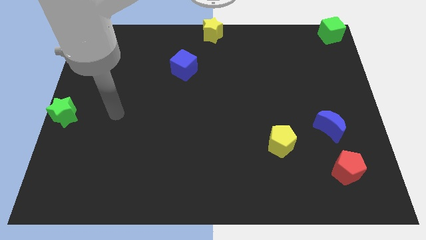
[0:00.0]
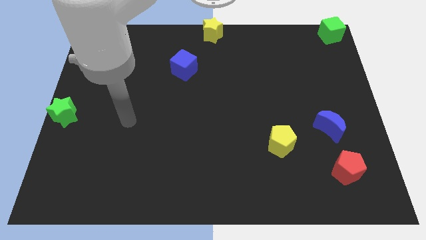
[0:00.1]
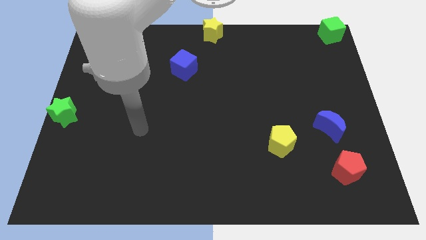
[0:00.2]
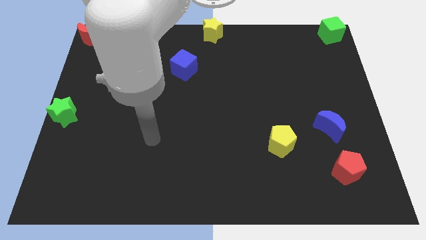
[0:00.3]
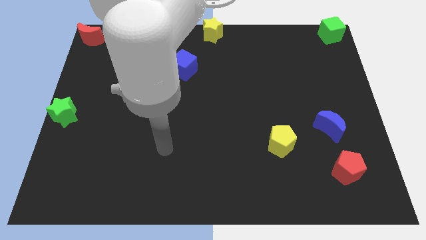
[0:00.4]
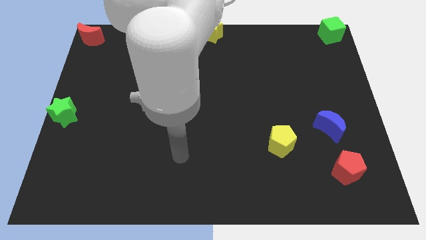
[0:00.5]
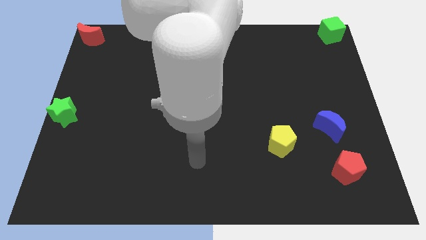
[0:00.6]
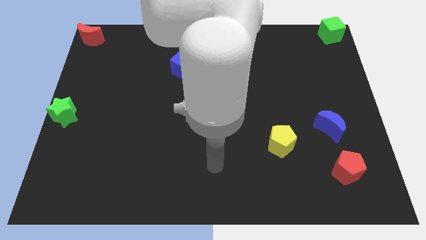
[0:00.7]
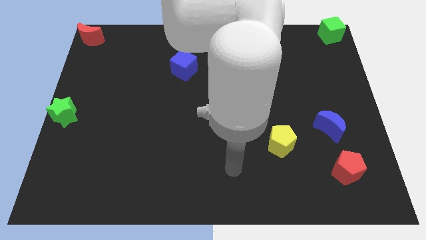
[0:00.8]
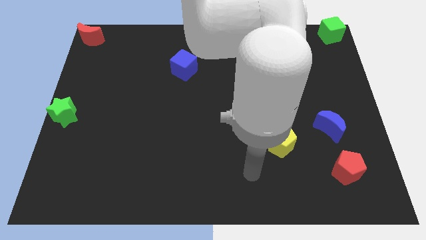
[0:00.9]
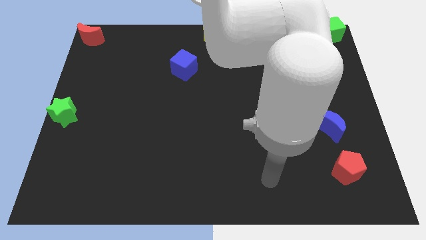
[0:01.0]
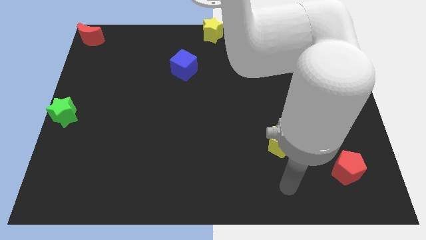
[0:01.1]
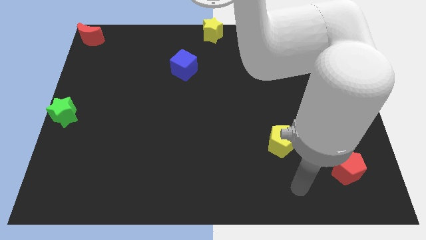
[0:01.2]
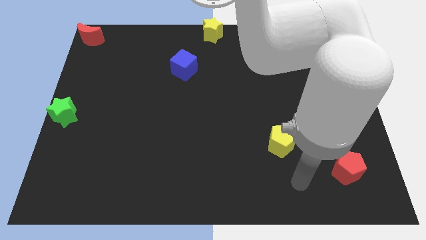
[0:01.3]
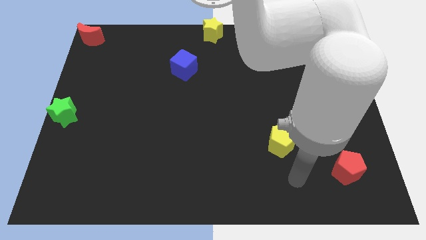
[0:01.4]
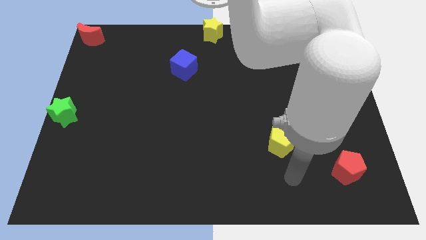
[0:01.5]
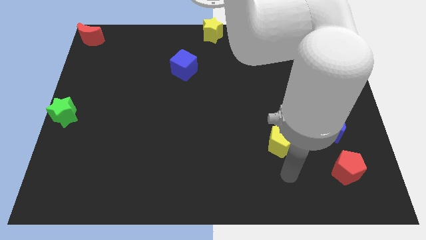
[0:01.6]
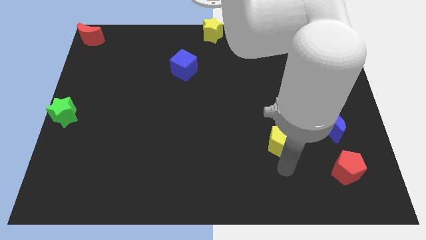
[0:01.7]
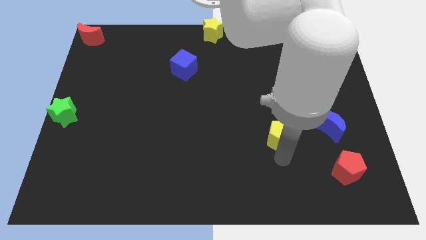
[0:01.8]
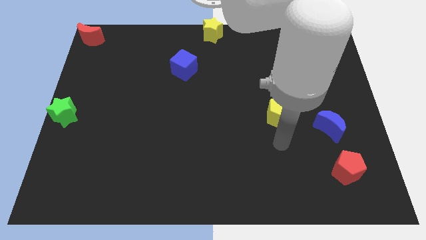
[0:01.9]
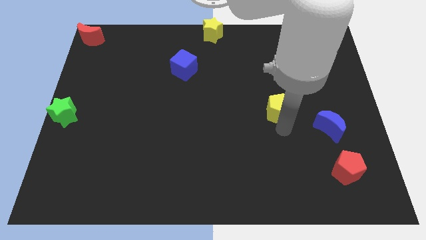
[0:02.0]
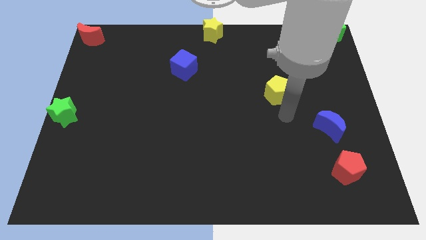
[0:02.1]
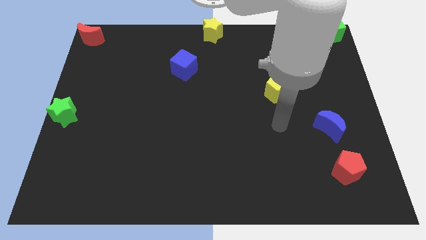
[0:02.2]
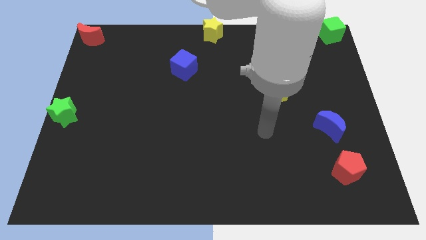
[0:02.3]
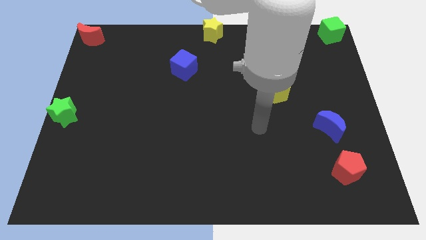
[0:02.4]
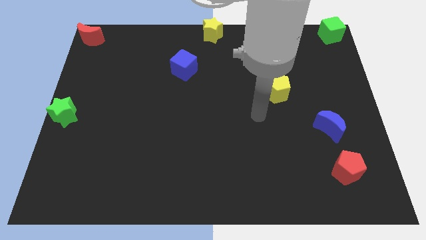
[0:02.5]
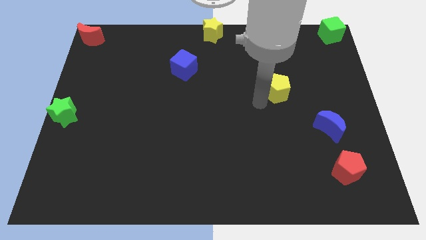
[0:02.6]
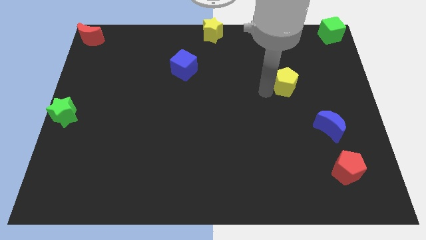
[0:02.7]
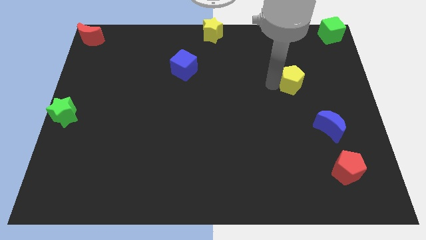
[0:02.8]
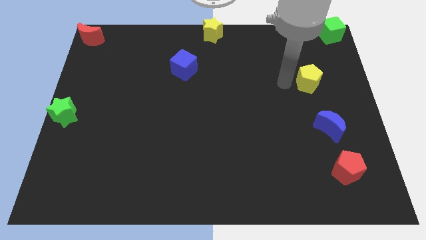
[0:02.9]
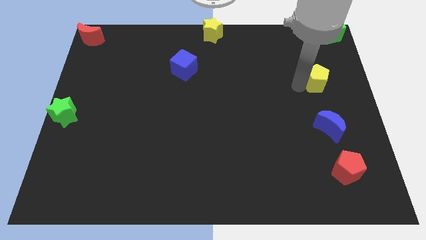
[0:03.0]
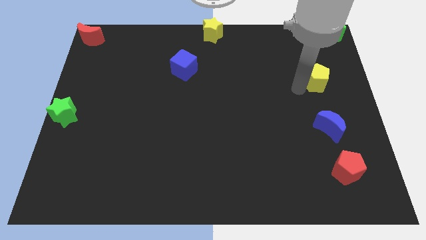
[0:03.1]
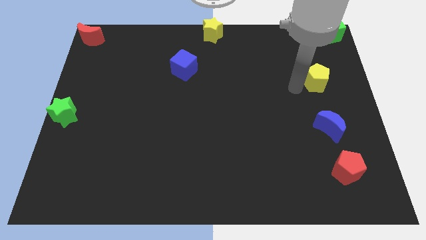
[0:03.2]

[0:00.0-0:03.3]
push the yellow pentagon to the top of the blue crescent

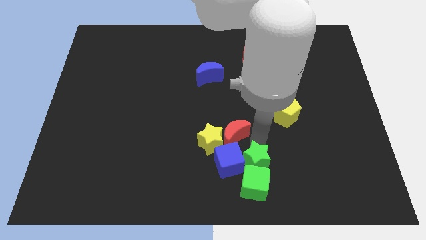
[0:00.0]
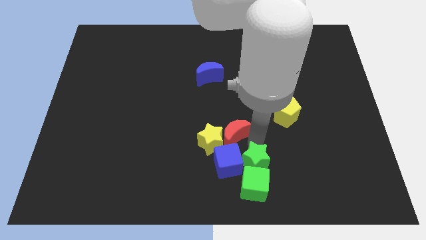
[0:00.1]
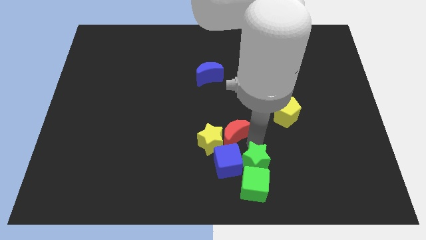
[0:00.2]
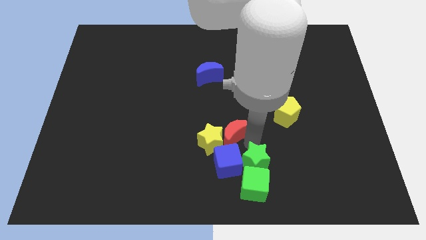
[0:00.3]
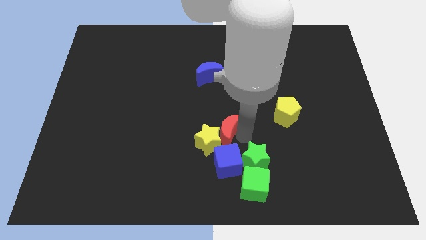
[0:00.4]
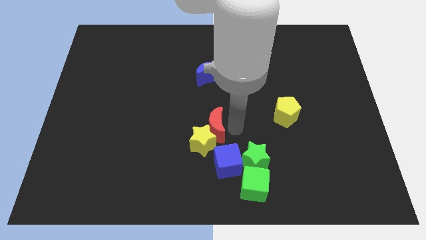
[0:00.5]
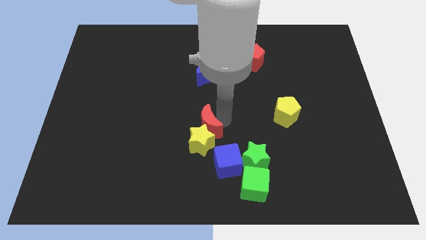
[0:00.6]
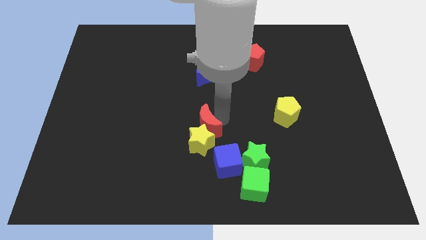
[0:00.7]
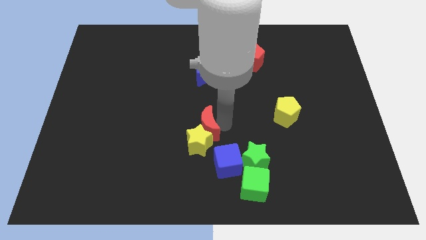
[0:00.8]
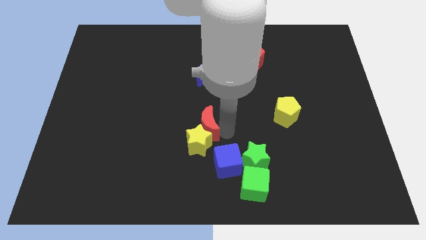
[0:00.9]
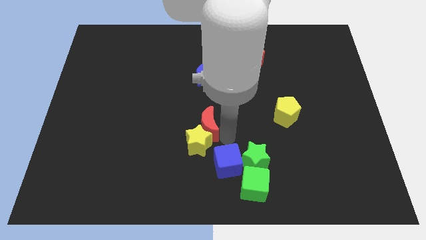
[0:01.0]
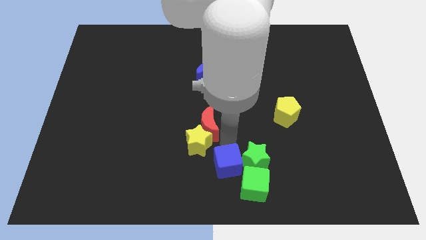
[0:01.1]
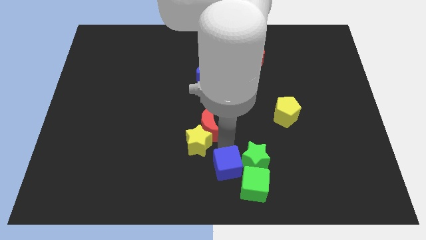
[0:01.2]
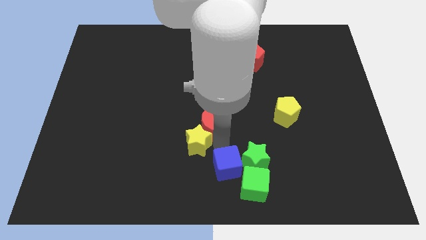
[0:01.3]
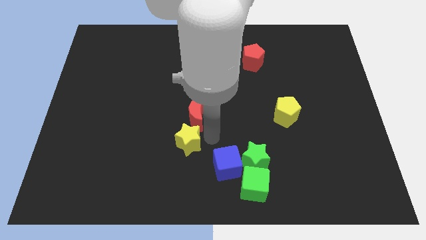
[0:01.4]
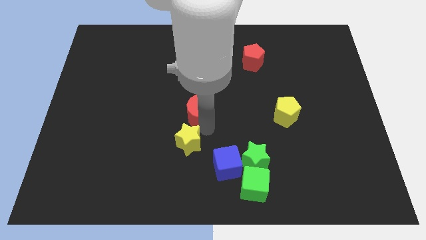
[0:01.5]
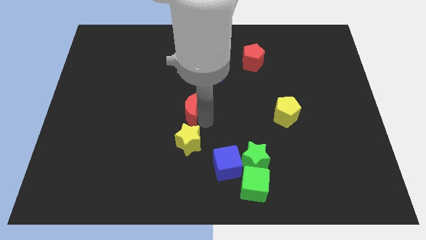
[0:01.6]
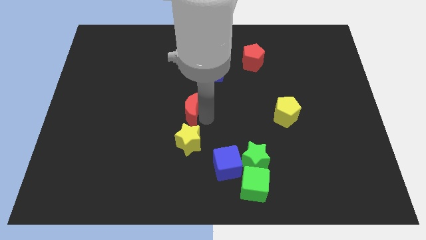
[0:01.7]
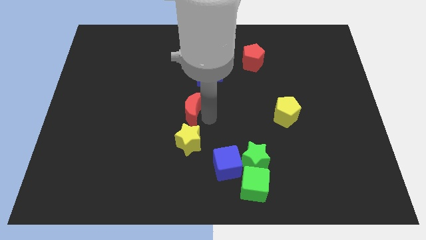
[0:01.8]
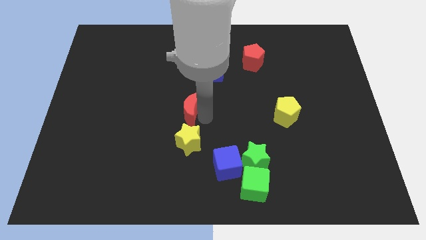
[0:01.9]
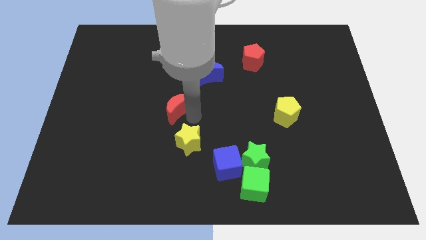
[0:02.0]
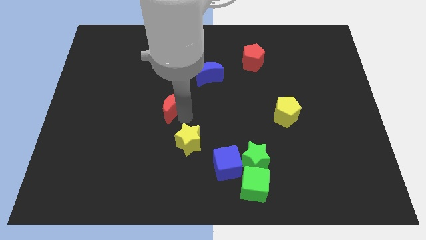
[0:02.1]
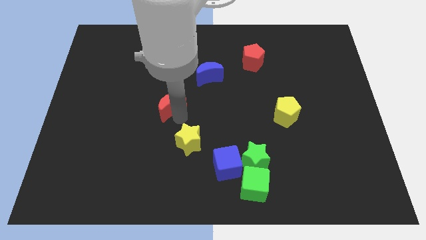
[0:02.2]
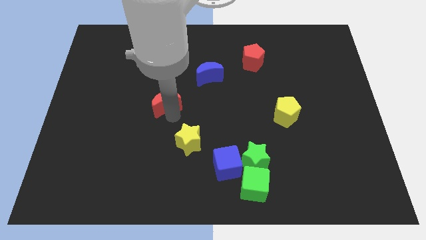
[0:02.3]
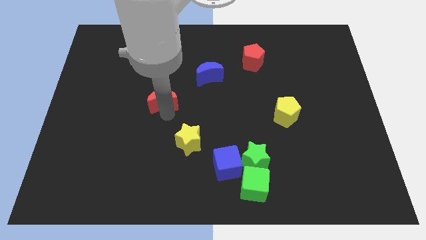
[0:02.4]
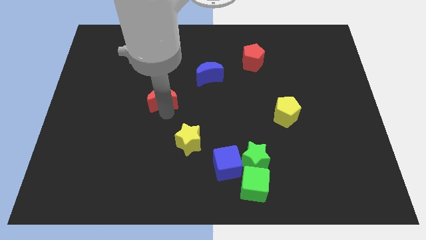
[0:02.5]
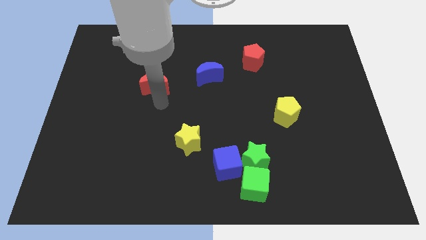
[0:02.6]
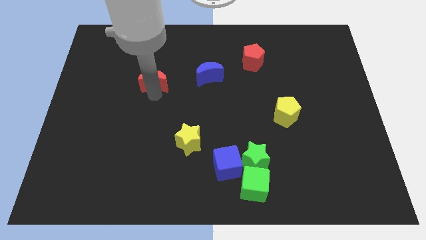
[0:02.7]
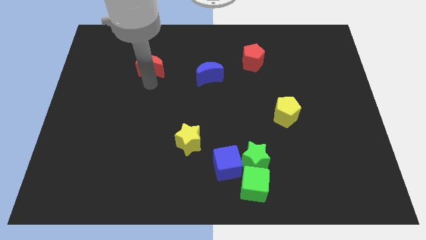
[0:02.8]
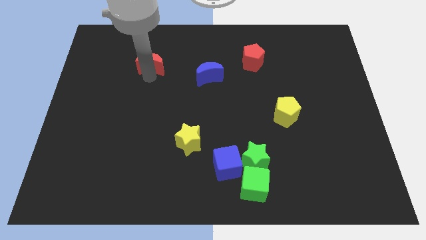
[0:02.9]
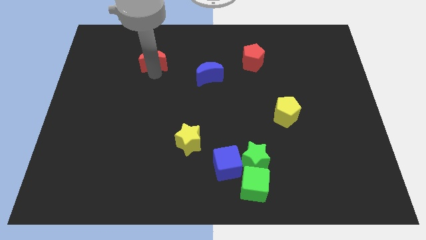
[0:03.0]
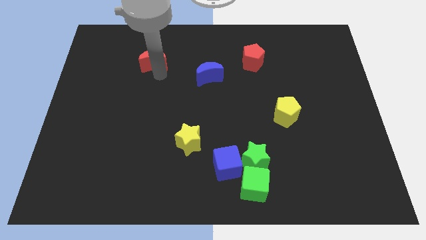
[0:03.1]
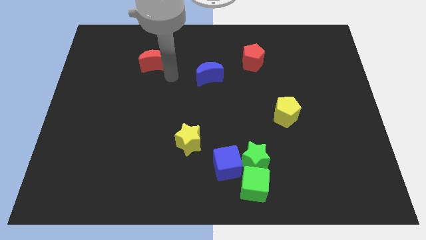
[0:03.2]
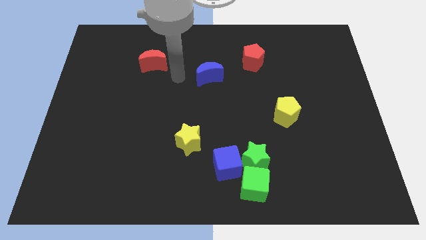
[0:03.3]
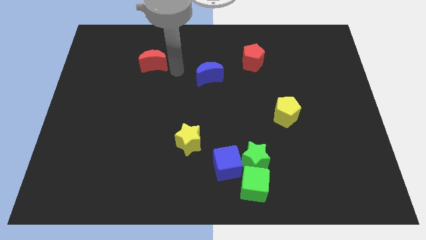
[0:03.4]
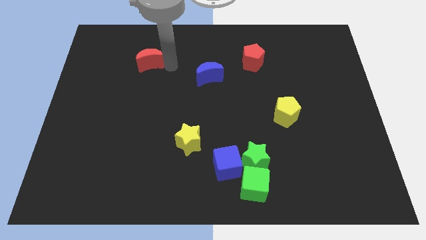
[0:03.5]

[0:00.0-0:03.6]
separate the red moon with the yellow star towards the top

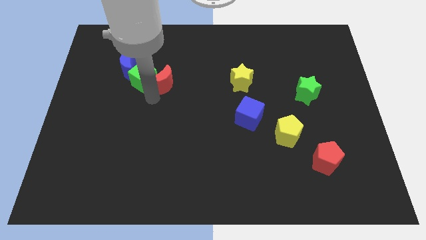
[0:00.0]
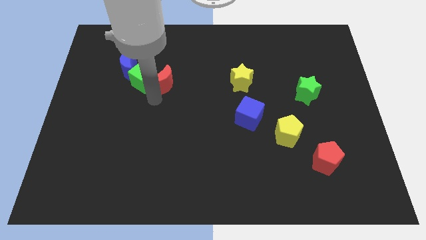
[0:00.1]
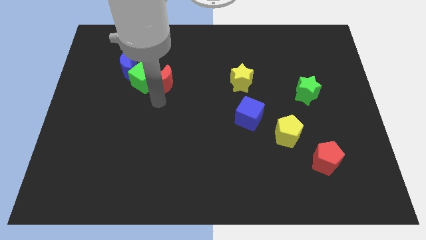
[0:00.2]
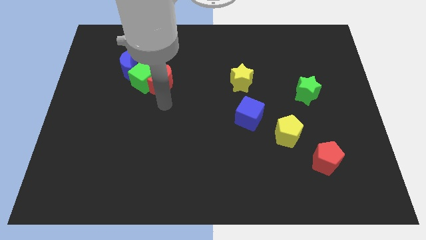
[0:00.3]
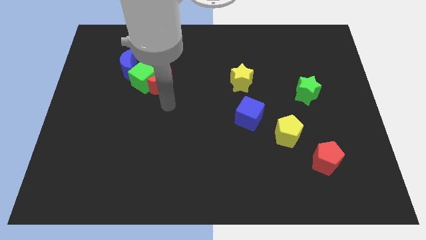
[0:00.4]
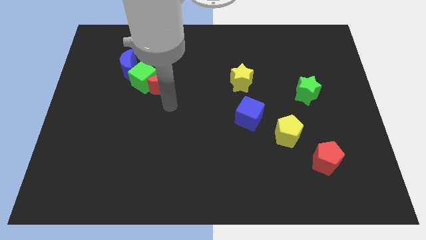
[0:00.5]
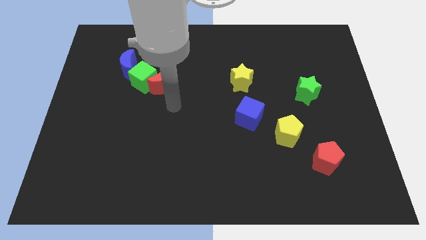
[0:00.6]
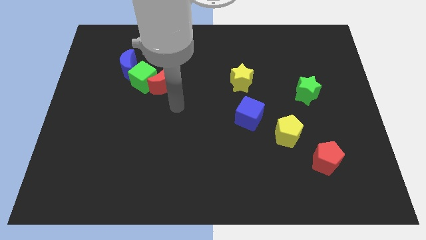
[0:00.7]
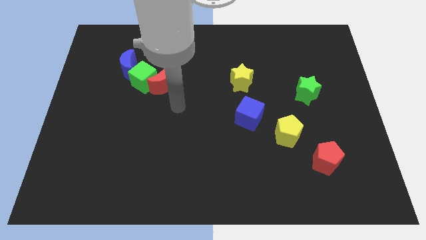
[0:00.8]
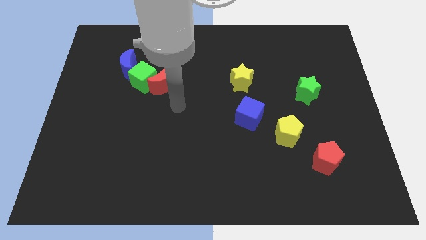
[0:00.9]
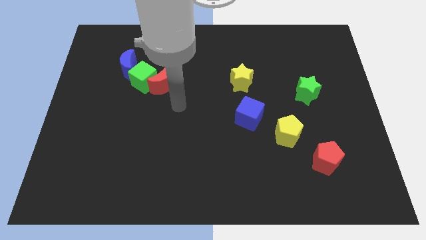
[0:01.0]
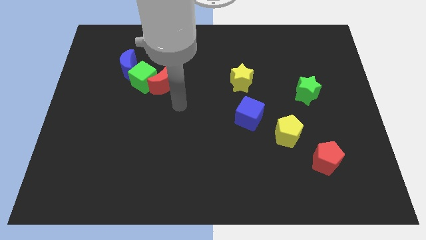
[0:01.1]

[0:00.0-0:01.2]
move the arm away from the red moon

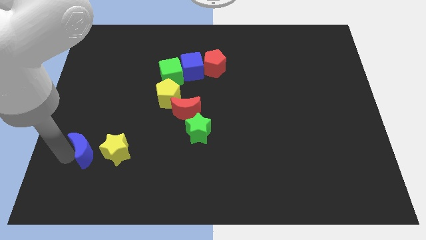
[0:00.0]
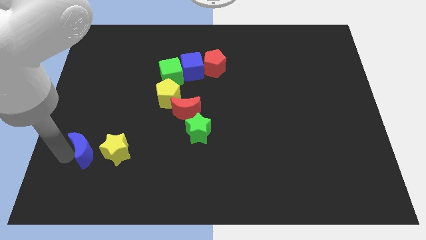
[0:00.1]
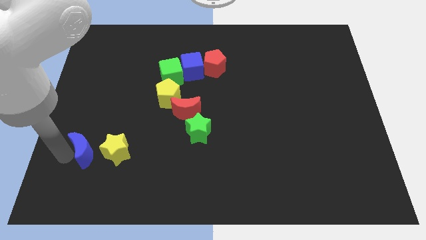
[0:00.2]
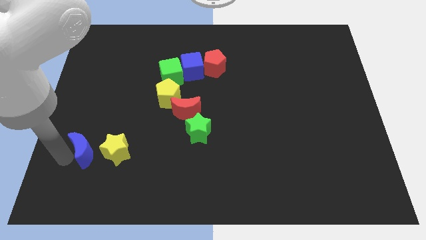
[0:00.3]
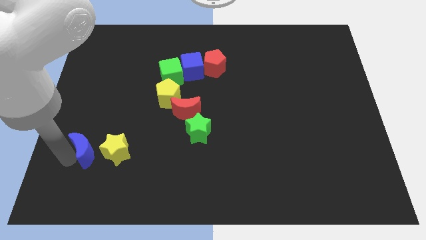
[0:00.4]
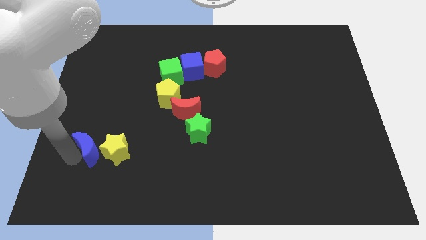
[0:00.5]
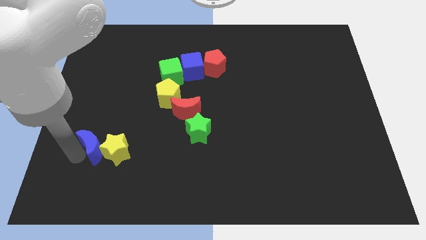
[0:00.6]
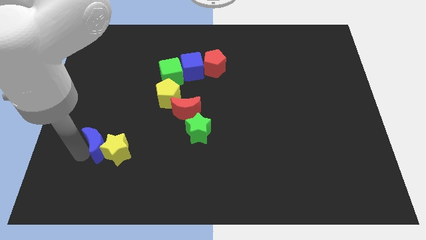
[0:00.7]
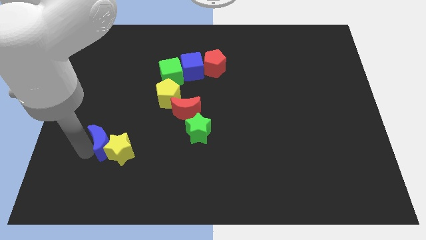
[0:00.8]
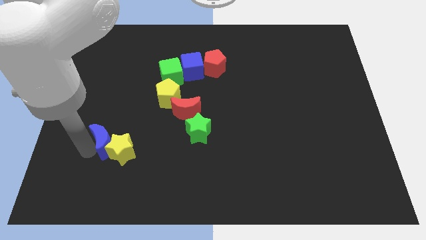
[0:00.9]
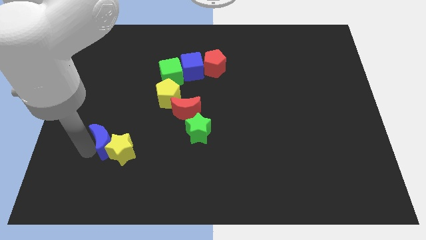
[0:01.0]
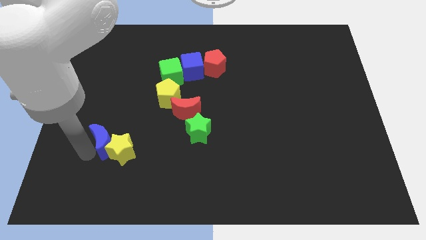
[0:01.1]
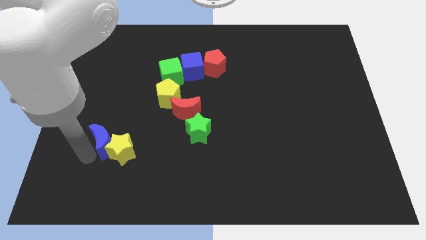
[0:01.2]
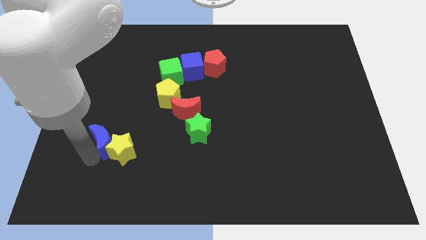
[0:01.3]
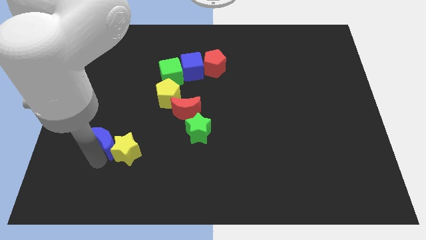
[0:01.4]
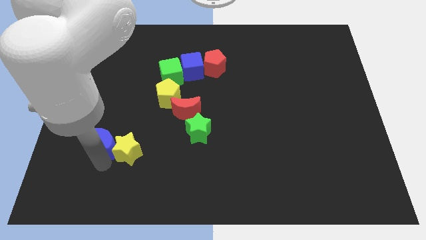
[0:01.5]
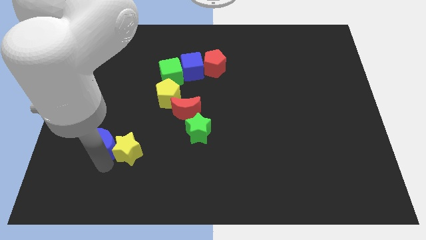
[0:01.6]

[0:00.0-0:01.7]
push the blue moon into the yellow star
